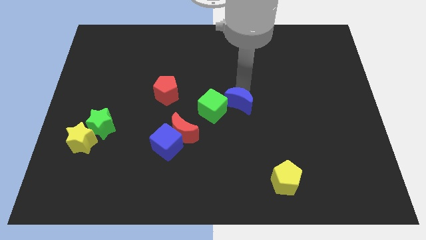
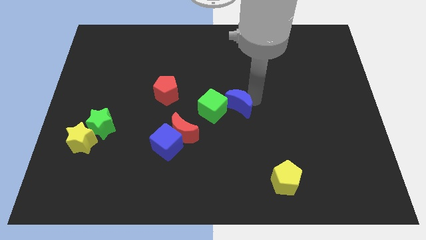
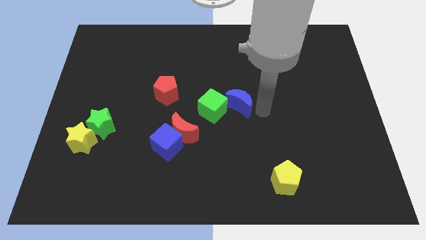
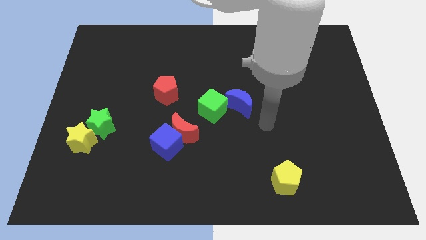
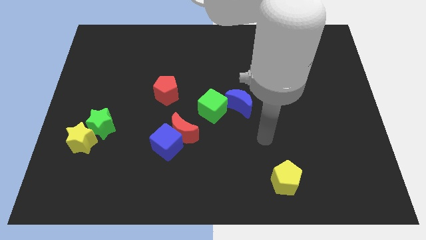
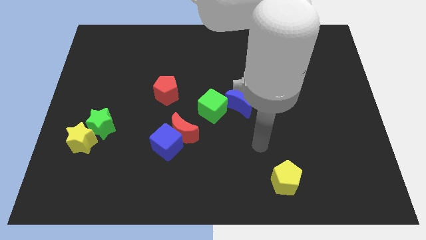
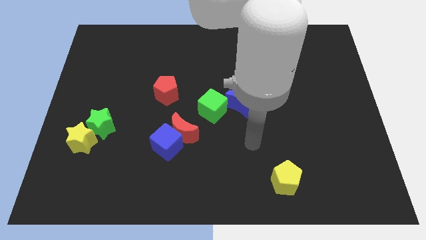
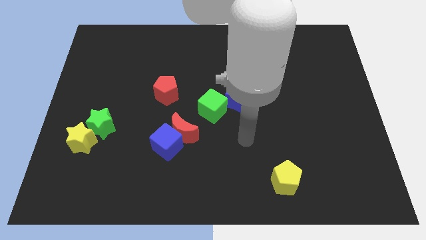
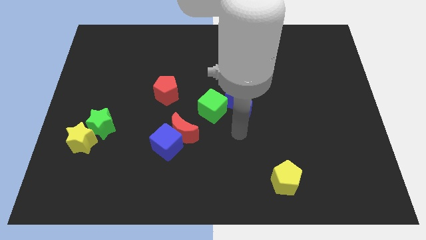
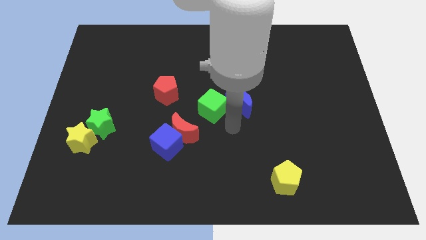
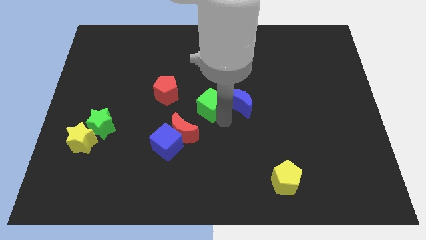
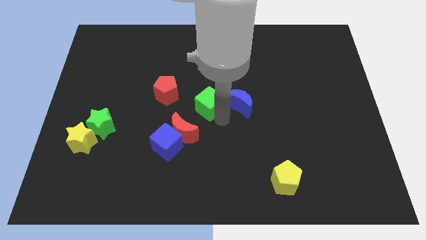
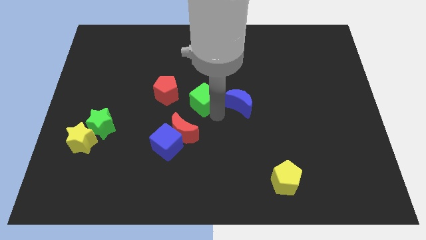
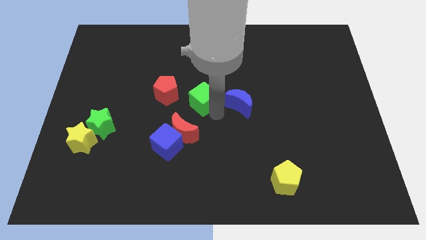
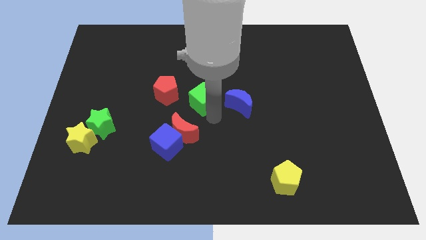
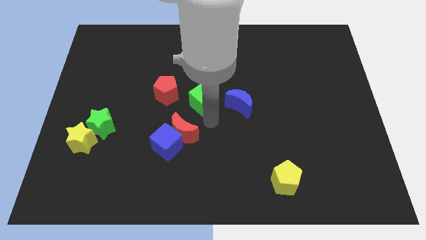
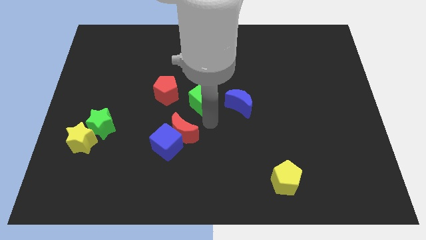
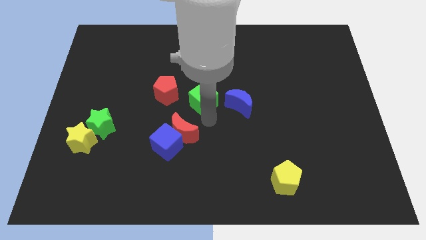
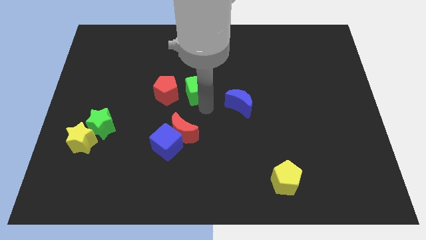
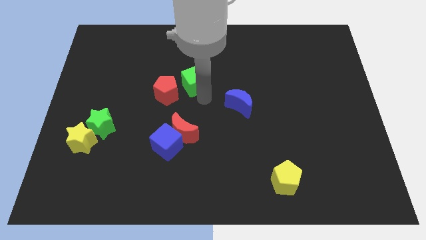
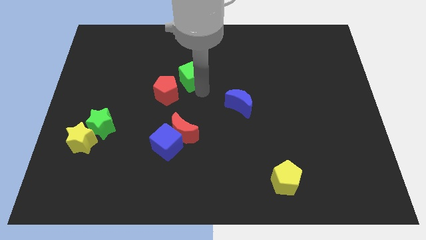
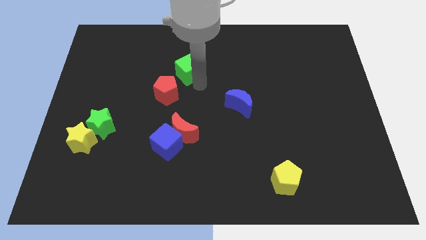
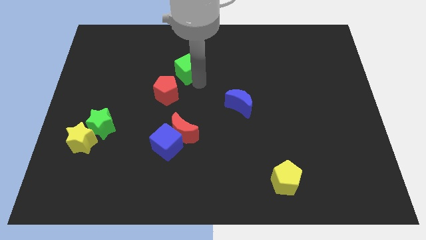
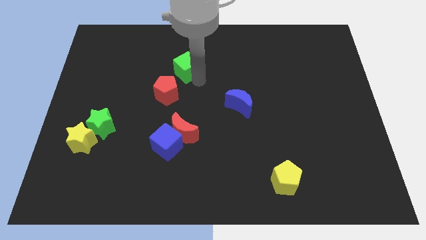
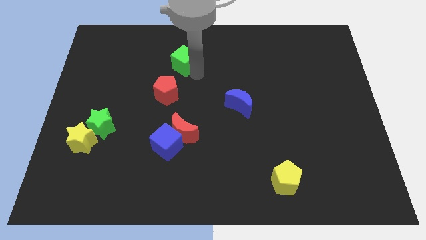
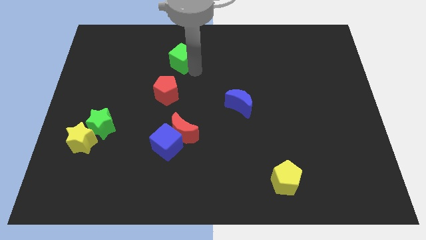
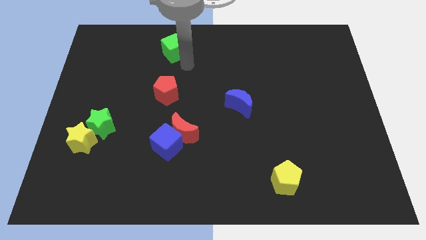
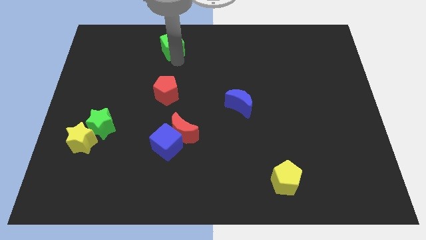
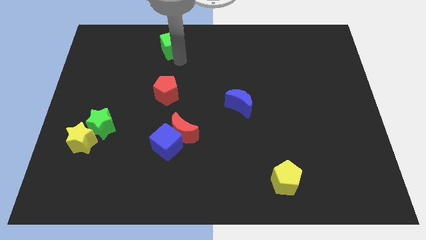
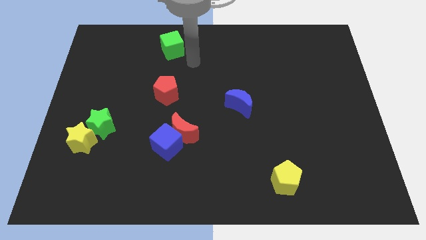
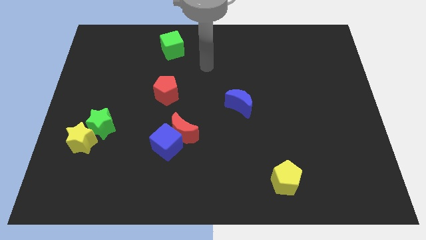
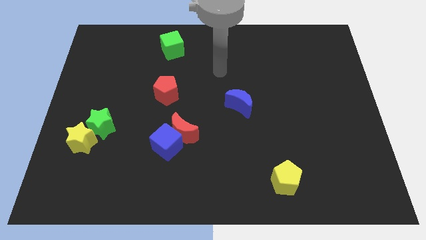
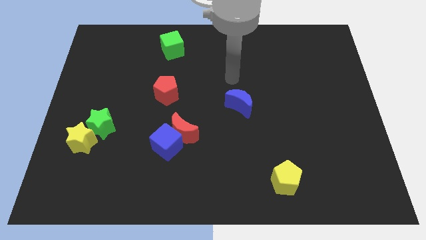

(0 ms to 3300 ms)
move the green cube away from the blue crescent

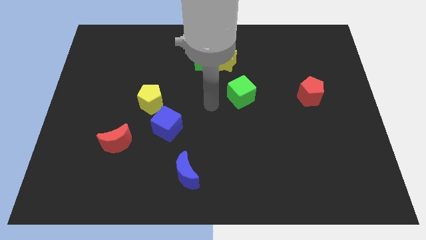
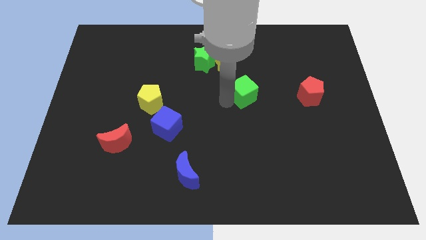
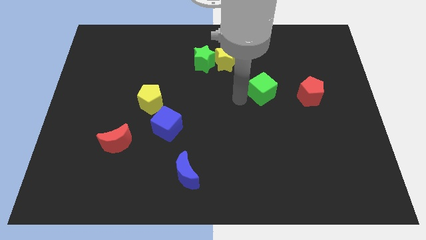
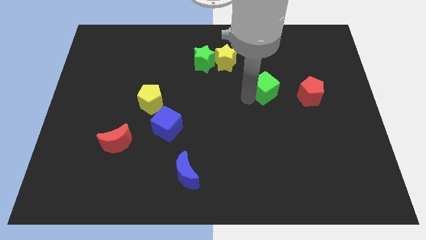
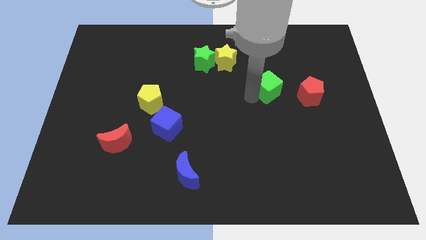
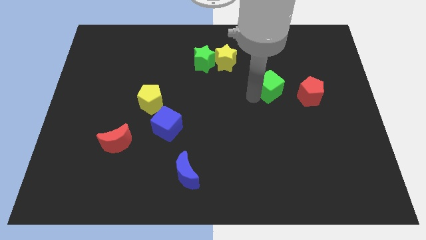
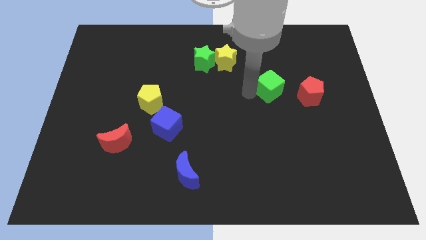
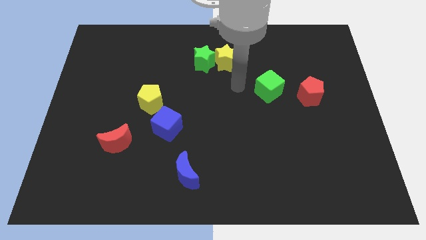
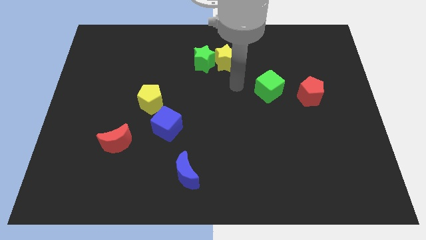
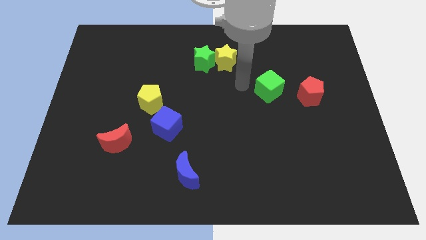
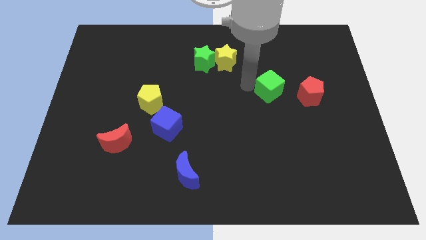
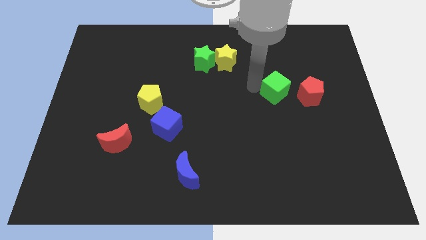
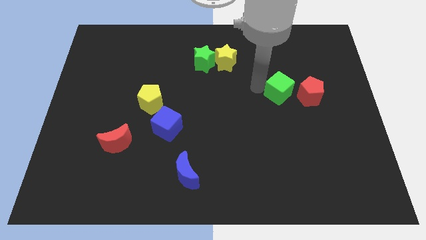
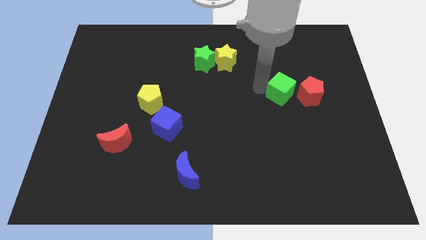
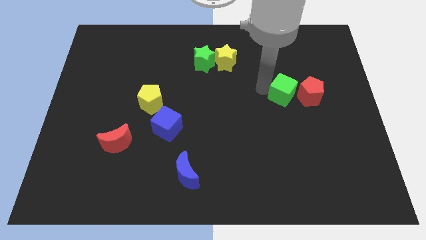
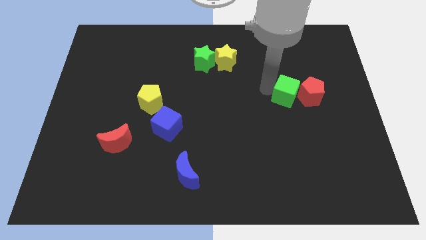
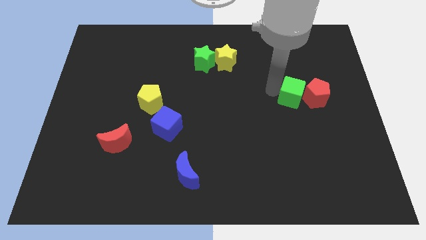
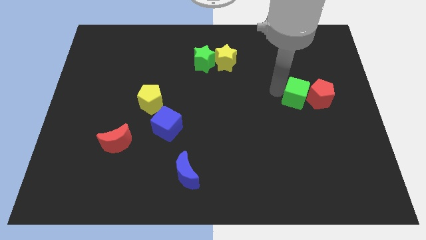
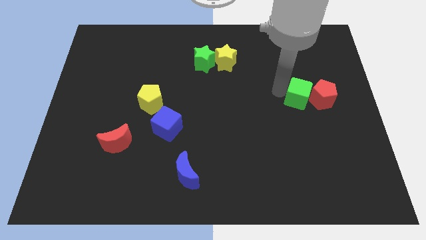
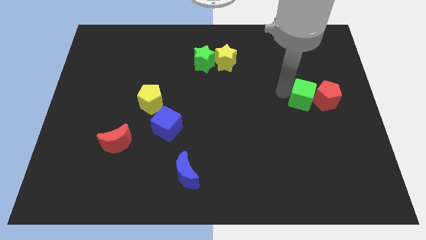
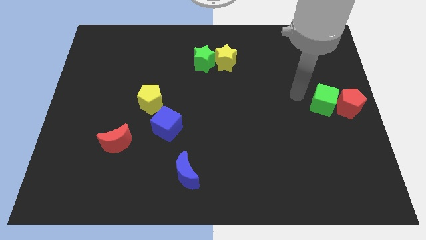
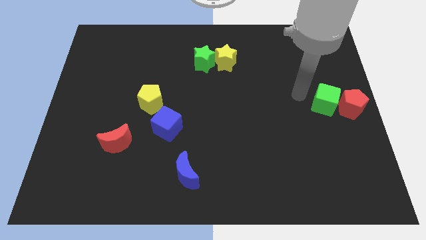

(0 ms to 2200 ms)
push the green cube into the red pentagon

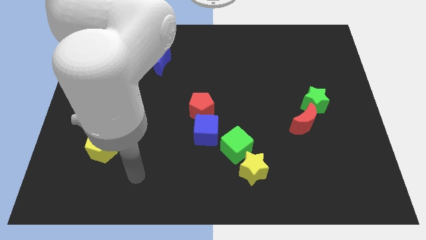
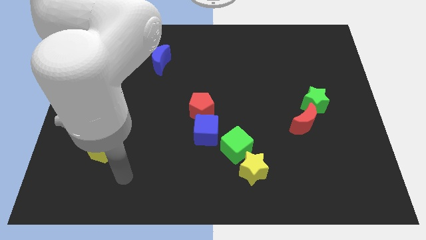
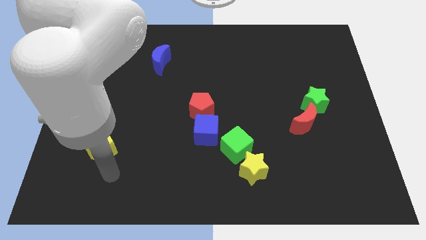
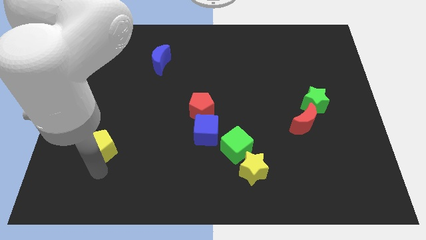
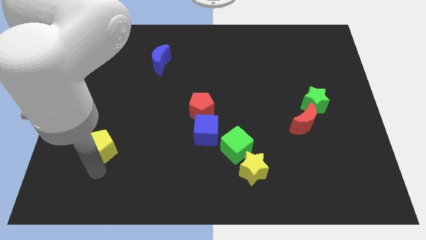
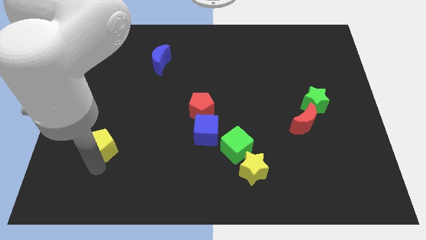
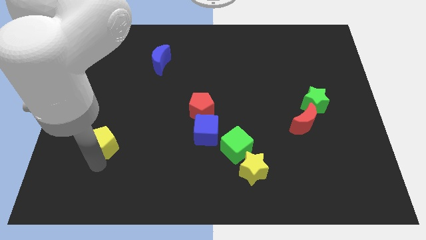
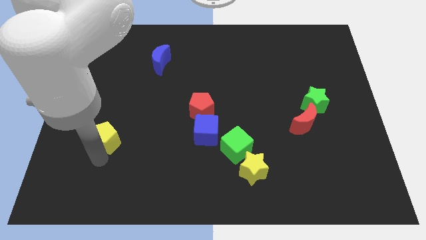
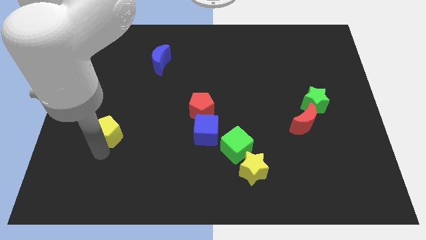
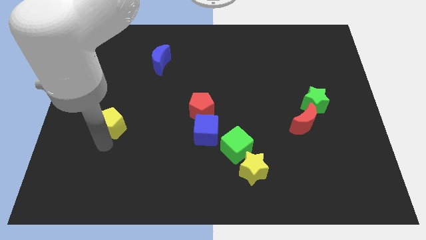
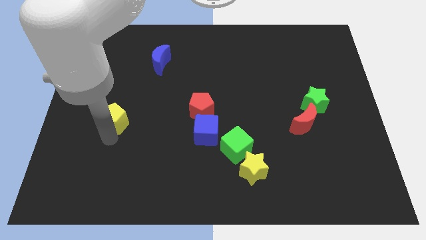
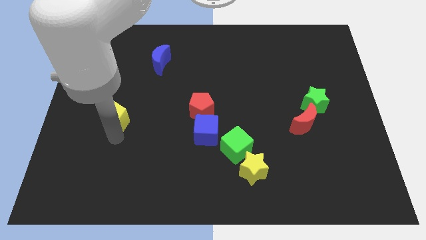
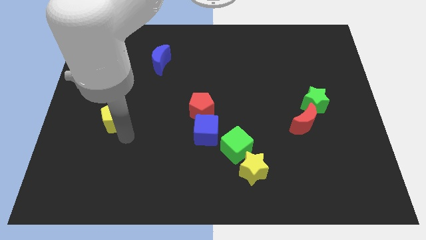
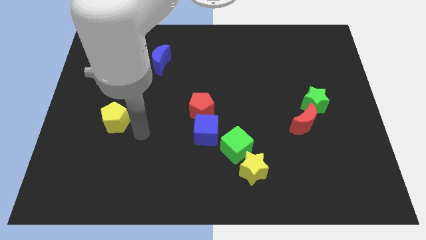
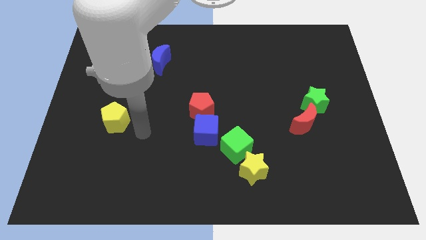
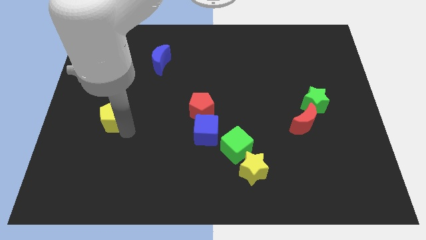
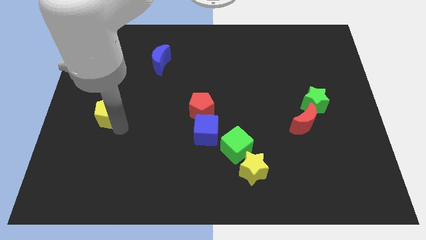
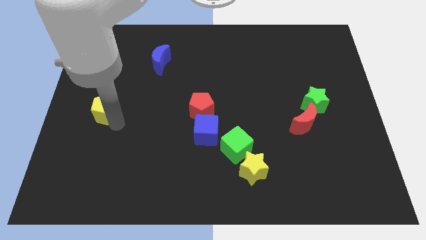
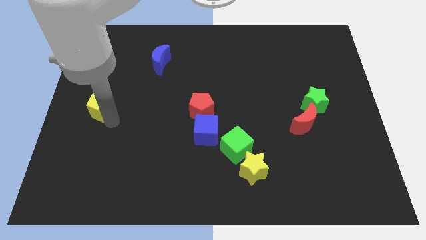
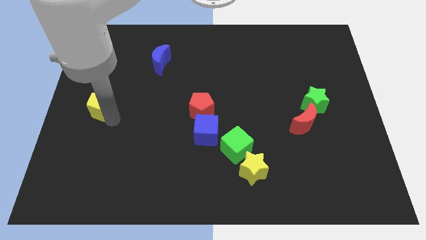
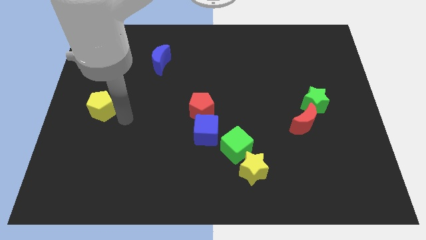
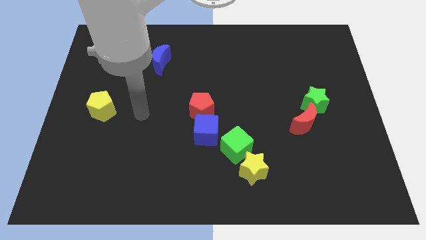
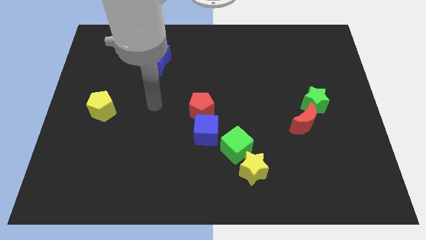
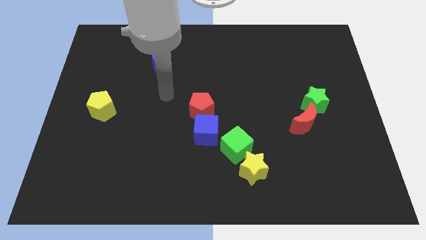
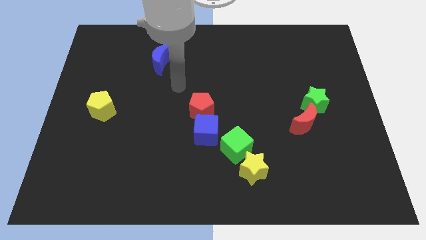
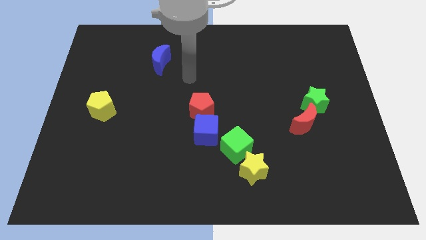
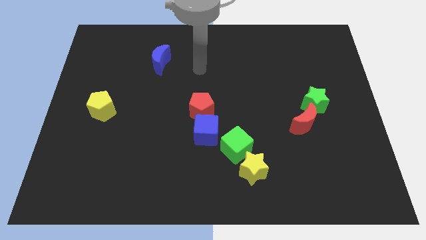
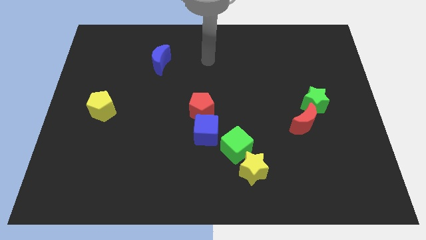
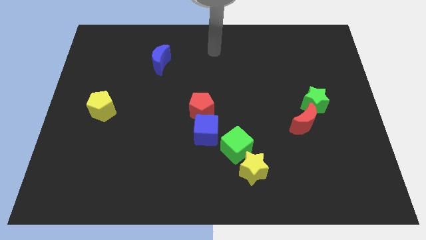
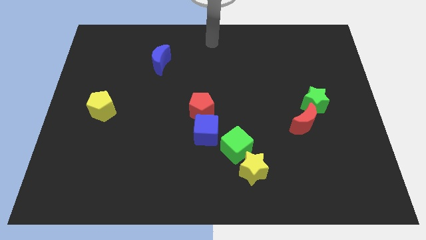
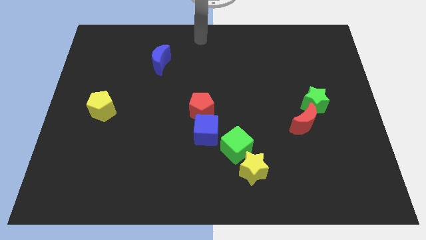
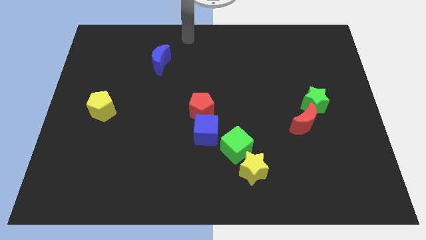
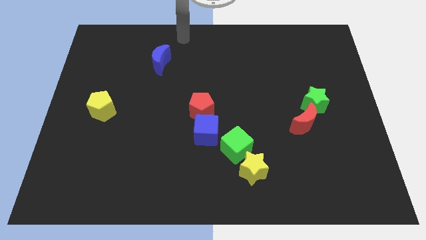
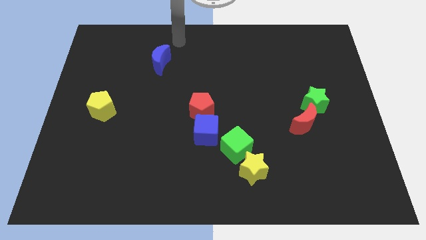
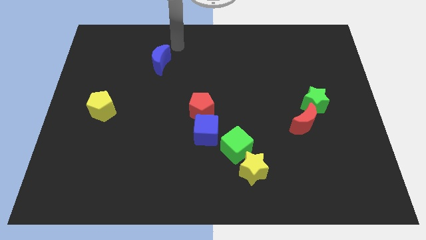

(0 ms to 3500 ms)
place the yellow pentagon to the left of red pentagon
